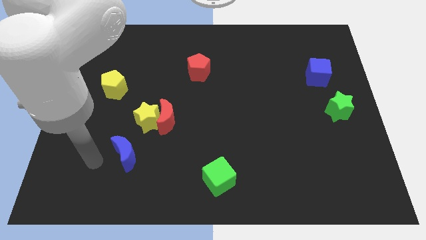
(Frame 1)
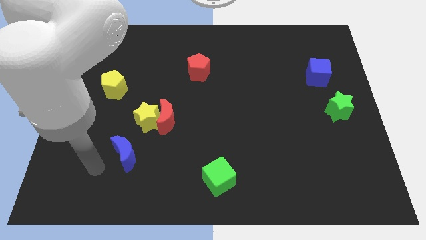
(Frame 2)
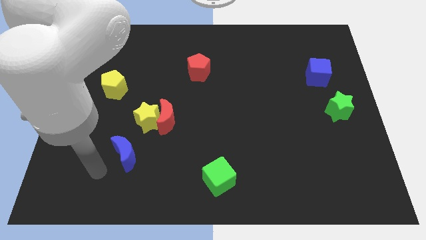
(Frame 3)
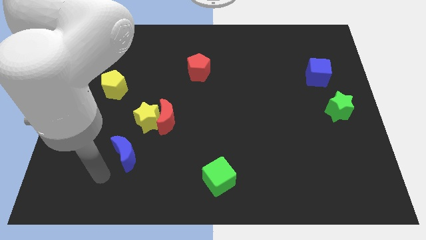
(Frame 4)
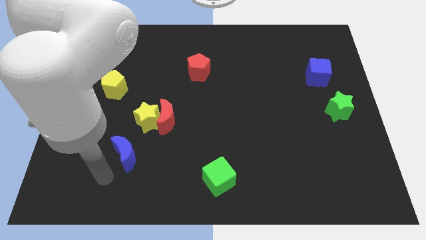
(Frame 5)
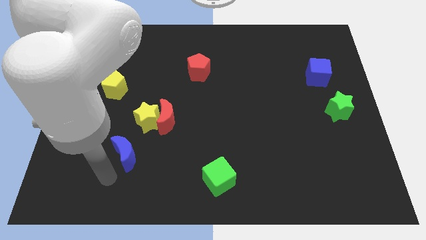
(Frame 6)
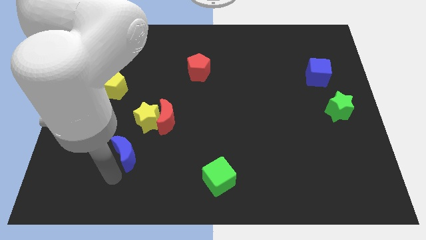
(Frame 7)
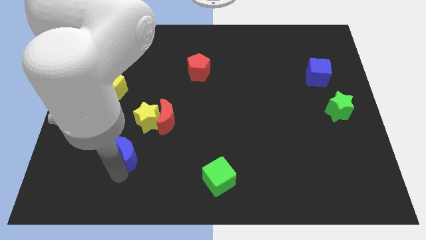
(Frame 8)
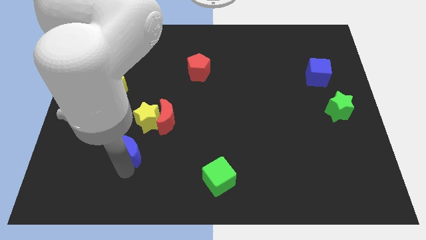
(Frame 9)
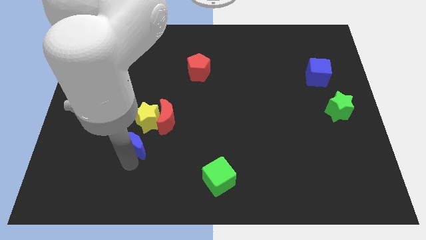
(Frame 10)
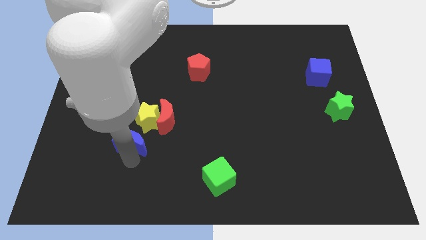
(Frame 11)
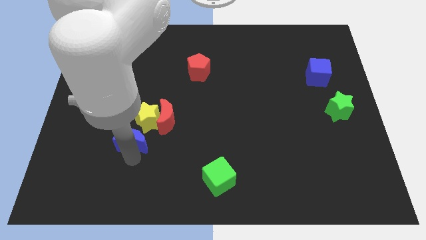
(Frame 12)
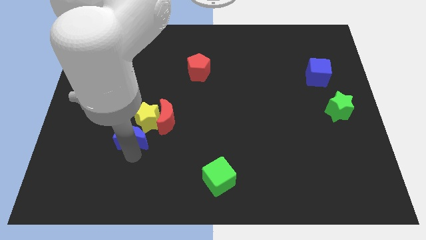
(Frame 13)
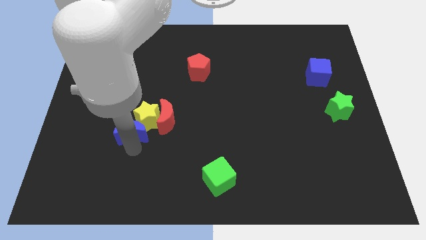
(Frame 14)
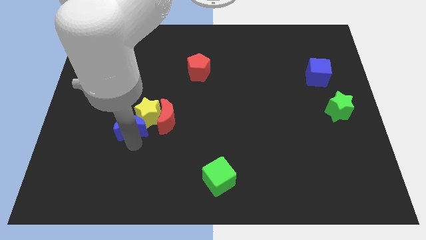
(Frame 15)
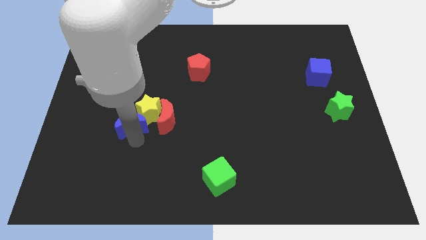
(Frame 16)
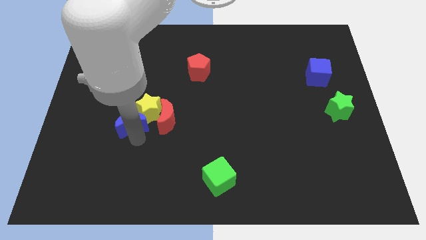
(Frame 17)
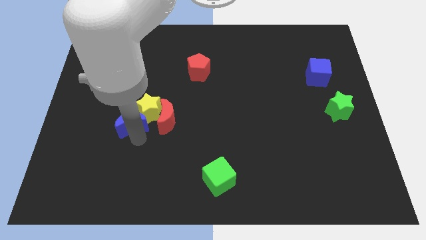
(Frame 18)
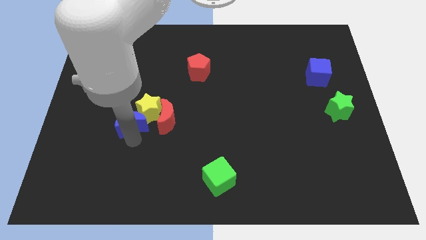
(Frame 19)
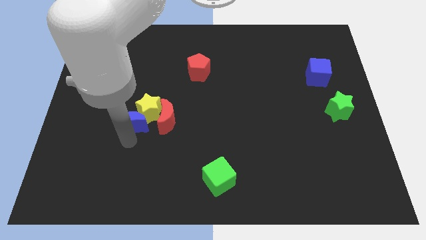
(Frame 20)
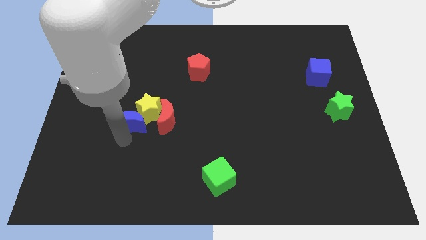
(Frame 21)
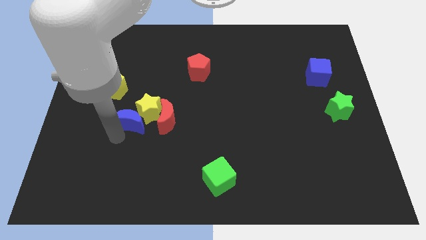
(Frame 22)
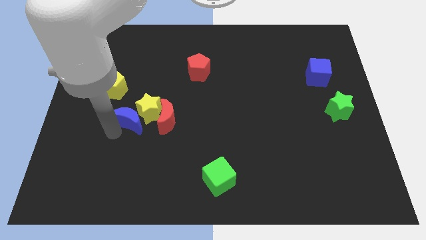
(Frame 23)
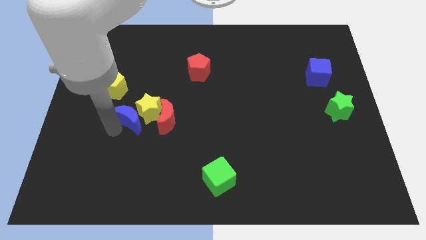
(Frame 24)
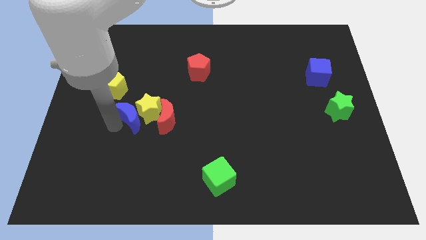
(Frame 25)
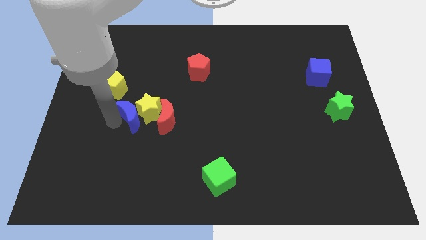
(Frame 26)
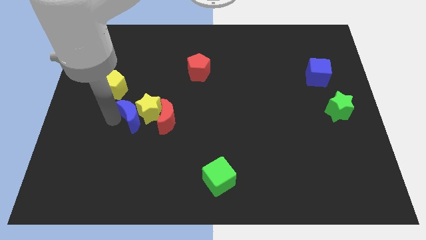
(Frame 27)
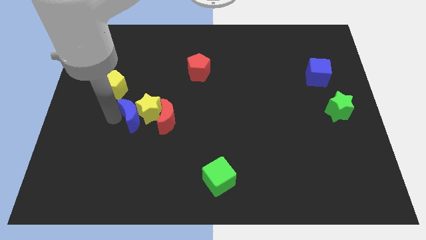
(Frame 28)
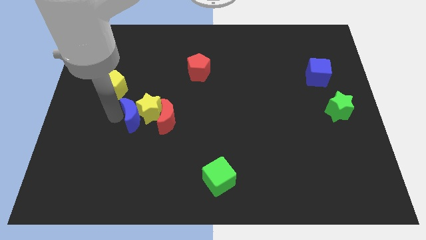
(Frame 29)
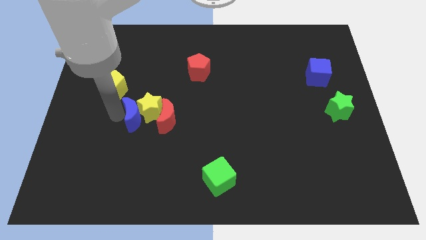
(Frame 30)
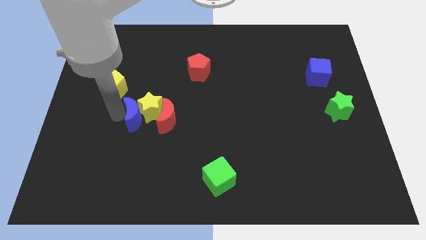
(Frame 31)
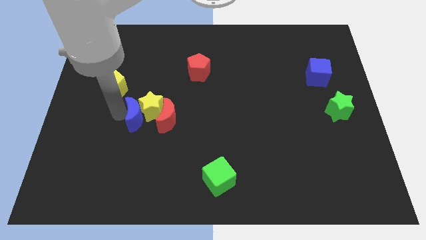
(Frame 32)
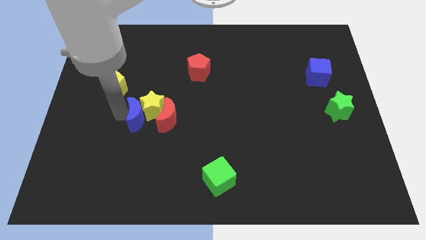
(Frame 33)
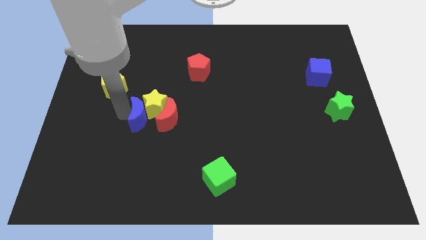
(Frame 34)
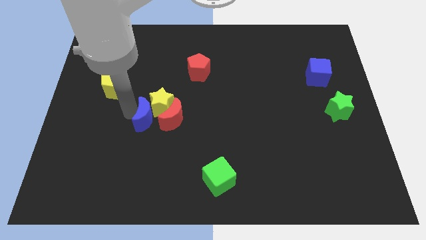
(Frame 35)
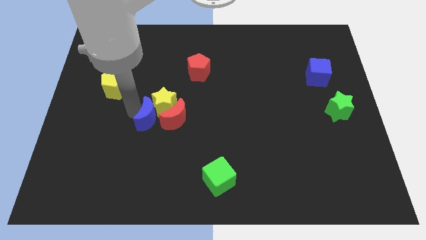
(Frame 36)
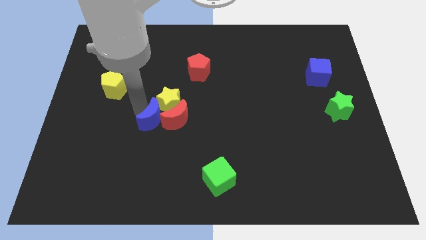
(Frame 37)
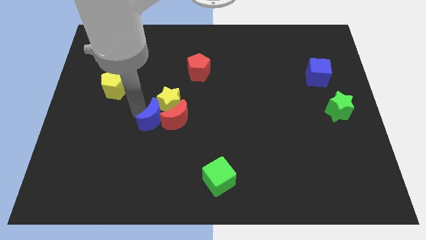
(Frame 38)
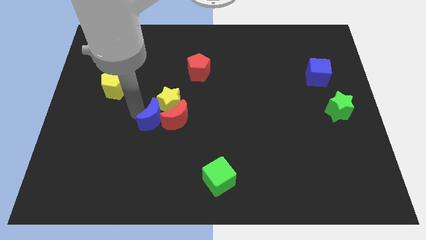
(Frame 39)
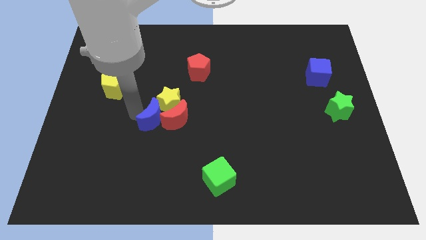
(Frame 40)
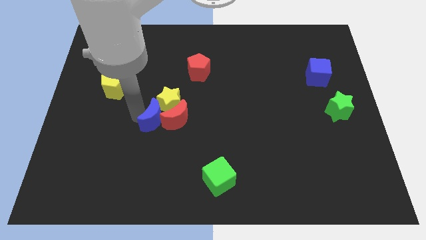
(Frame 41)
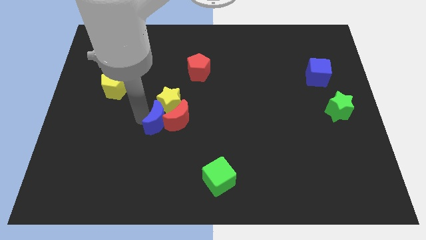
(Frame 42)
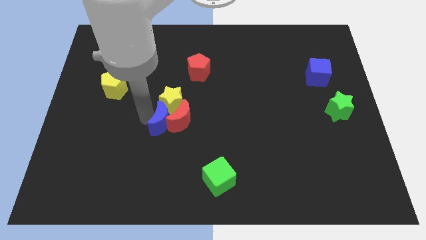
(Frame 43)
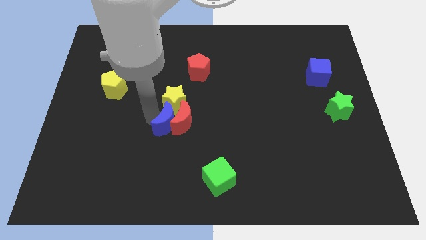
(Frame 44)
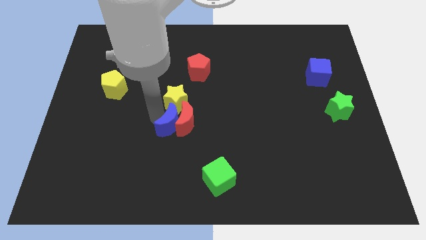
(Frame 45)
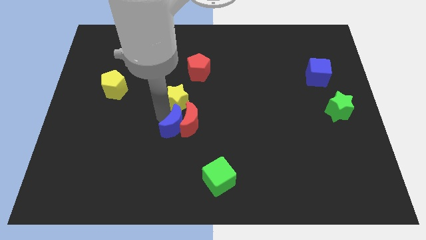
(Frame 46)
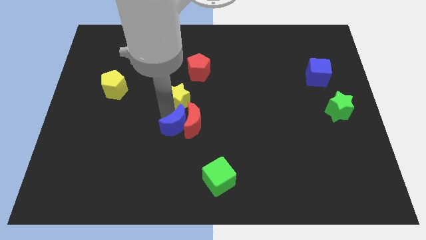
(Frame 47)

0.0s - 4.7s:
move the blue crescent into the red crescent to the center of the board

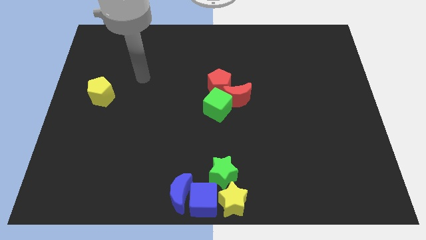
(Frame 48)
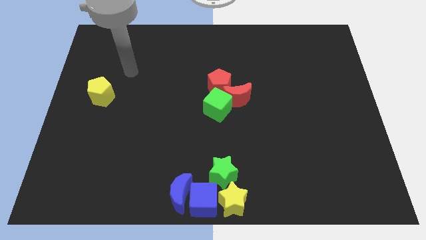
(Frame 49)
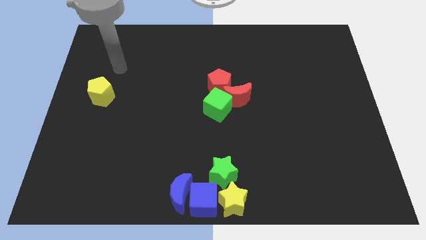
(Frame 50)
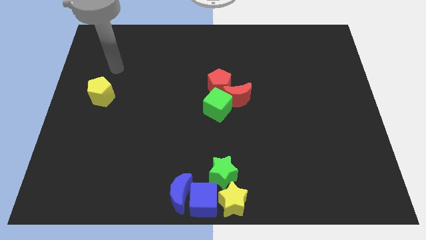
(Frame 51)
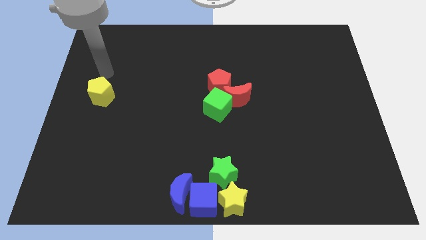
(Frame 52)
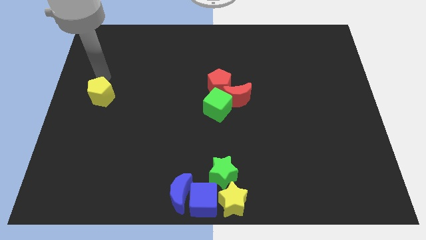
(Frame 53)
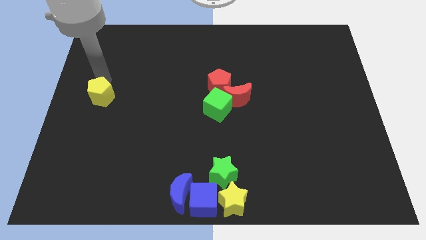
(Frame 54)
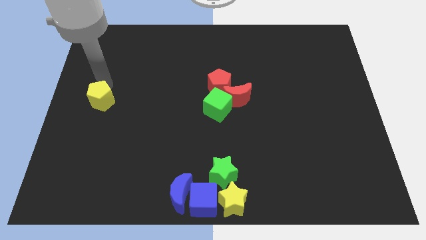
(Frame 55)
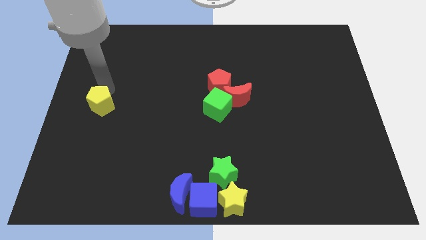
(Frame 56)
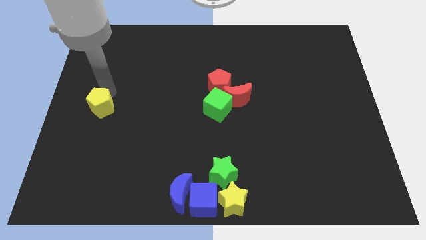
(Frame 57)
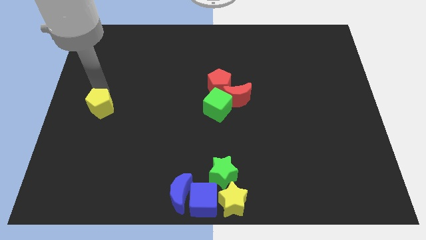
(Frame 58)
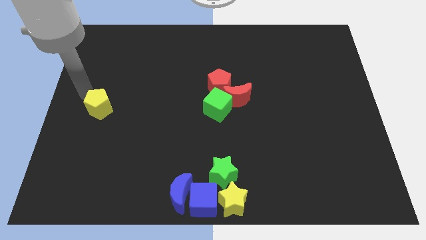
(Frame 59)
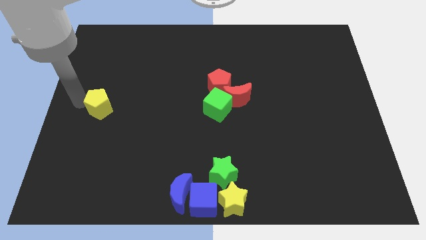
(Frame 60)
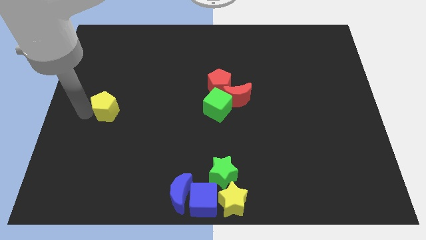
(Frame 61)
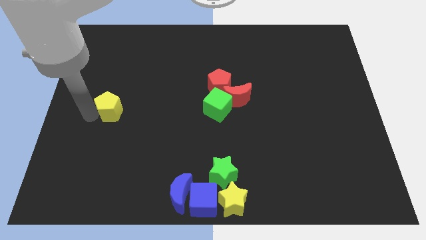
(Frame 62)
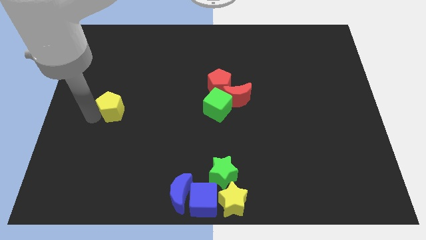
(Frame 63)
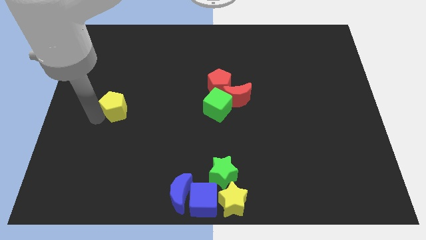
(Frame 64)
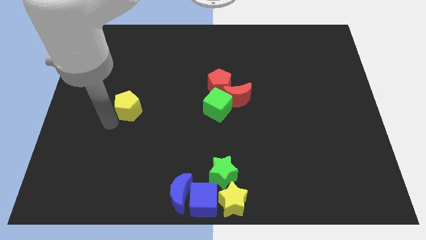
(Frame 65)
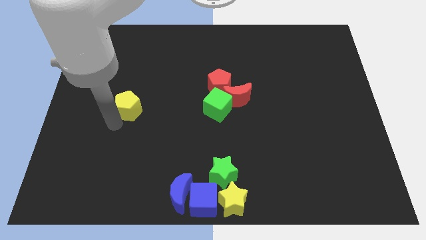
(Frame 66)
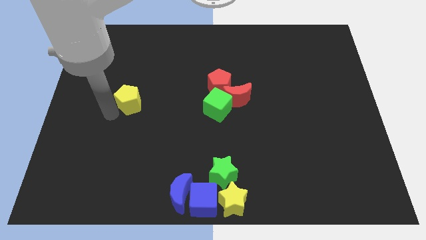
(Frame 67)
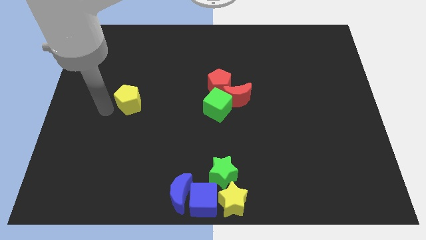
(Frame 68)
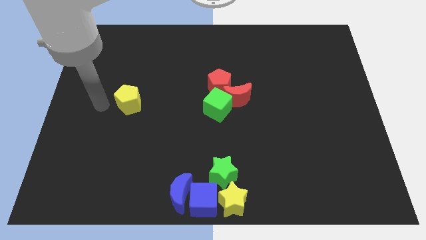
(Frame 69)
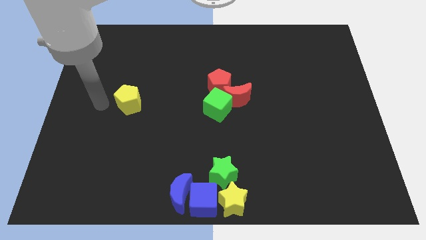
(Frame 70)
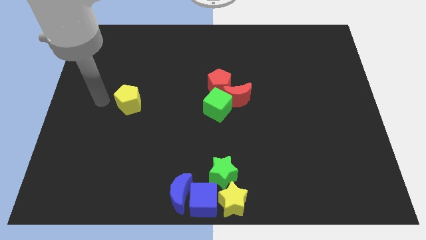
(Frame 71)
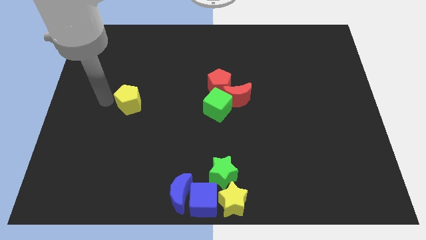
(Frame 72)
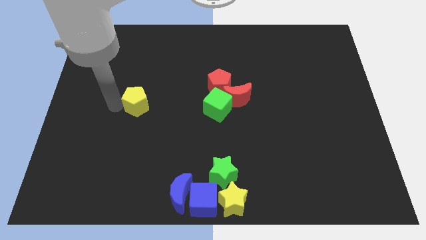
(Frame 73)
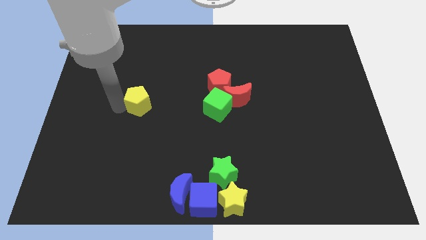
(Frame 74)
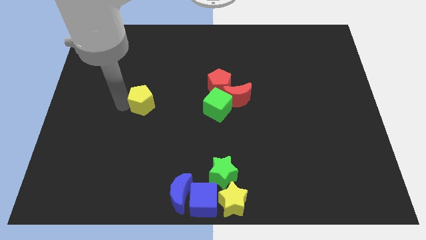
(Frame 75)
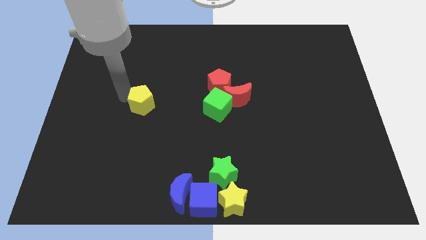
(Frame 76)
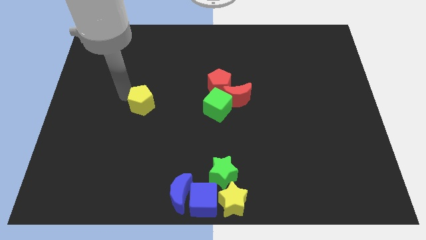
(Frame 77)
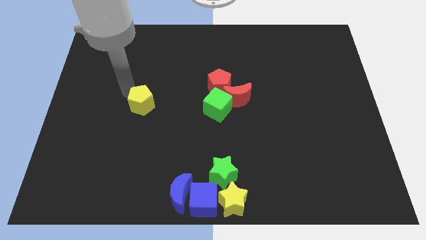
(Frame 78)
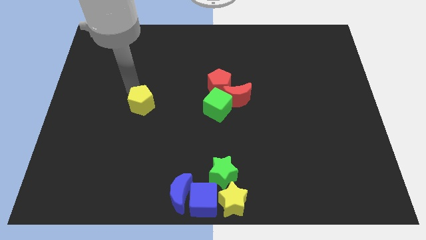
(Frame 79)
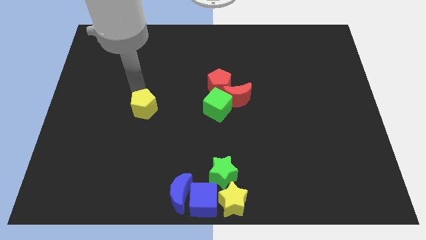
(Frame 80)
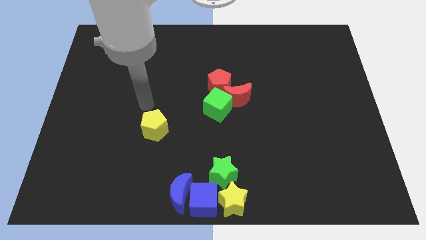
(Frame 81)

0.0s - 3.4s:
push the yellow pentagon towards the right of the board

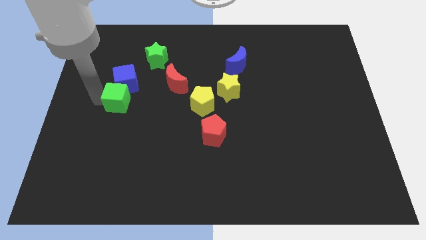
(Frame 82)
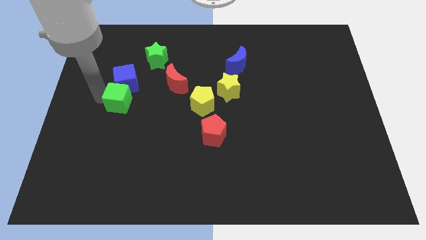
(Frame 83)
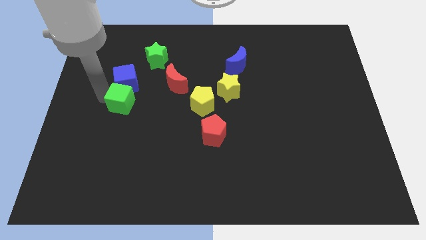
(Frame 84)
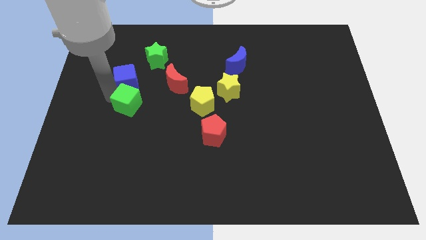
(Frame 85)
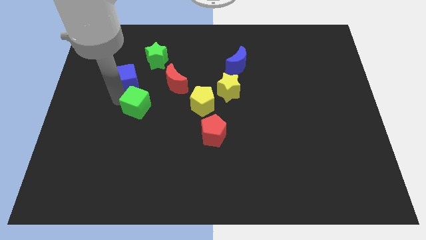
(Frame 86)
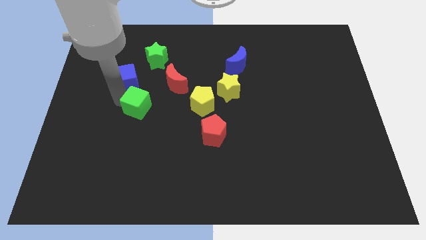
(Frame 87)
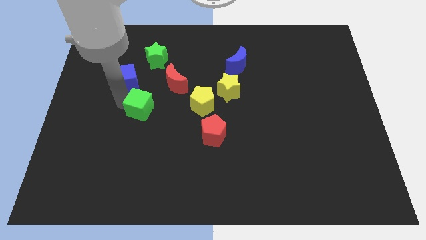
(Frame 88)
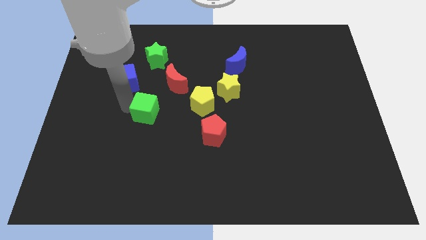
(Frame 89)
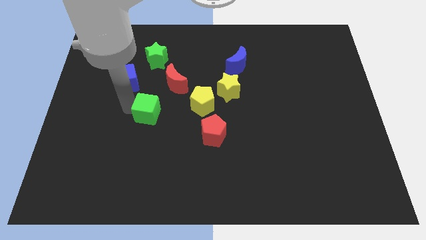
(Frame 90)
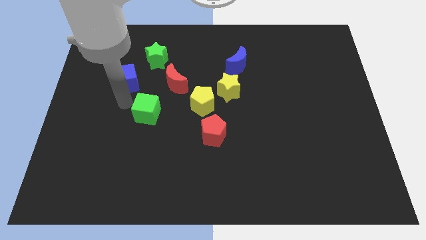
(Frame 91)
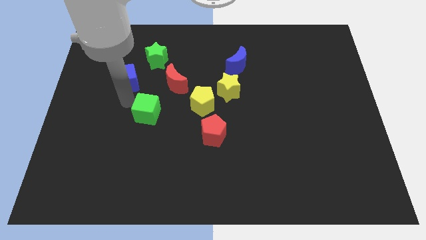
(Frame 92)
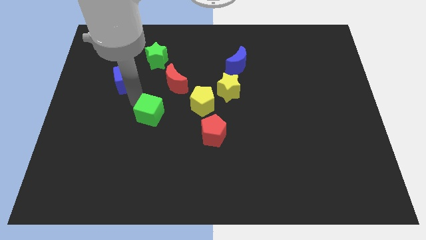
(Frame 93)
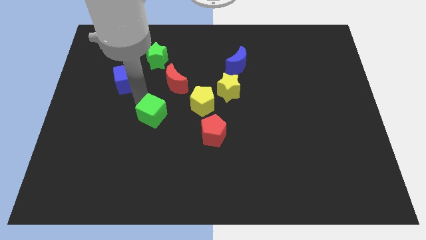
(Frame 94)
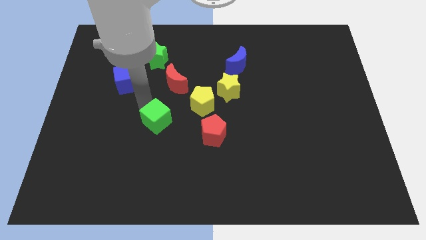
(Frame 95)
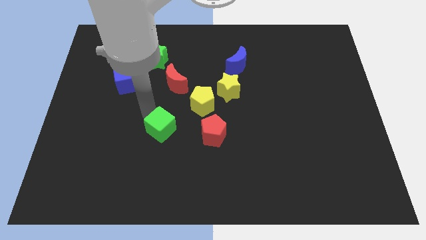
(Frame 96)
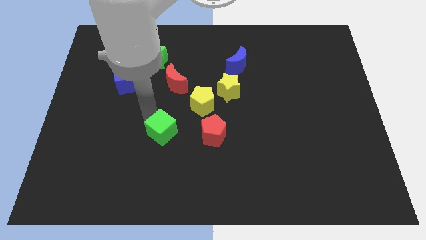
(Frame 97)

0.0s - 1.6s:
move the green cube left to the red pentagon
